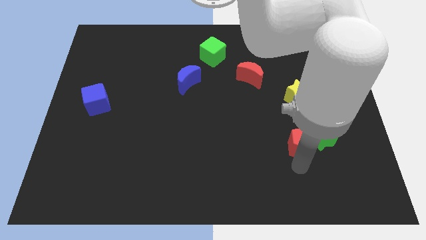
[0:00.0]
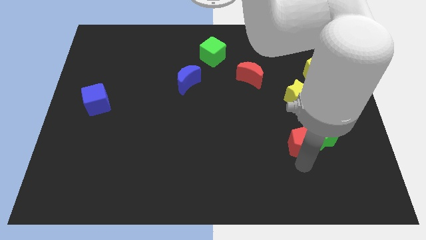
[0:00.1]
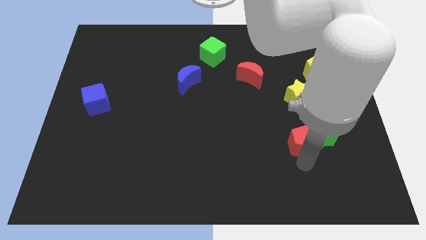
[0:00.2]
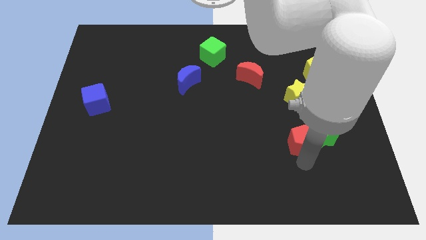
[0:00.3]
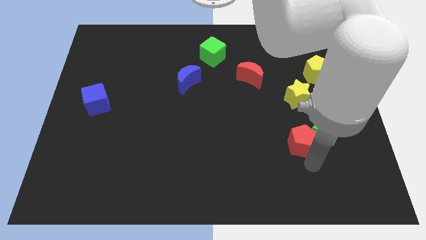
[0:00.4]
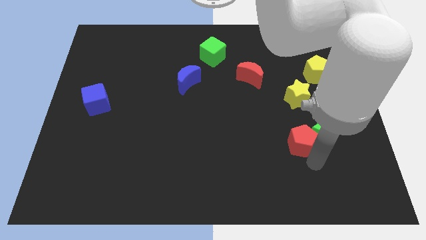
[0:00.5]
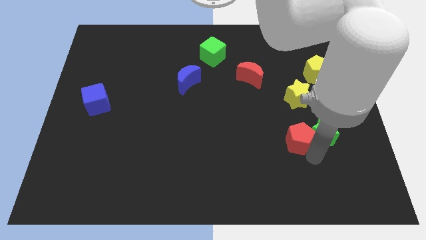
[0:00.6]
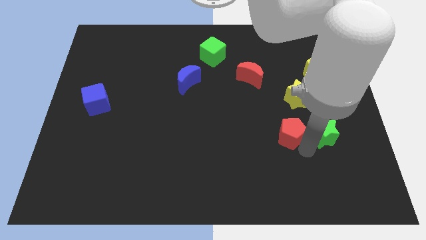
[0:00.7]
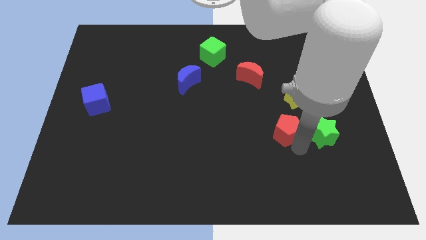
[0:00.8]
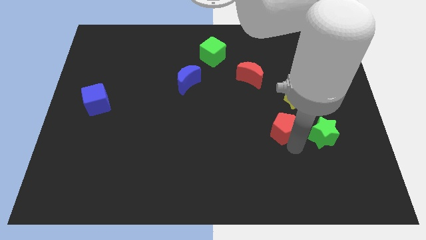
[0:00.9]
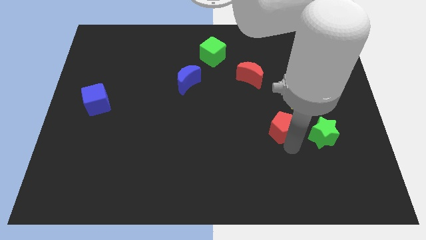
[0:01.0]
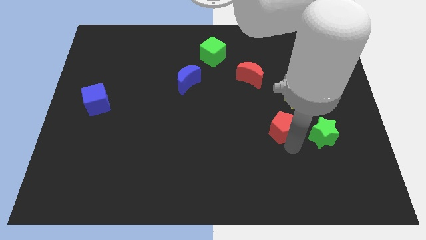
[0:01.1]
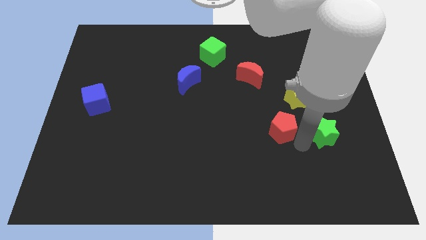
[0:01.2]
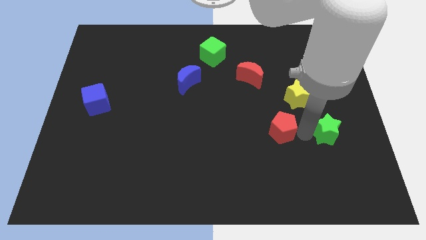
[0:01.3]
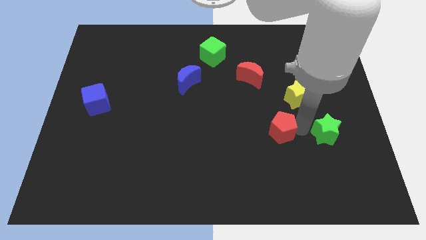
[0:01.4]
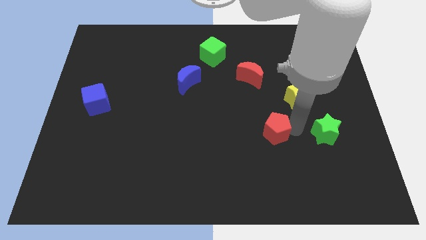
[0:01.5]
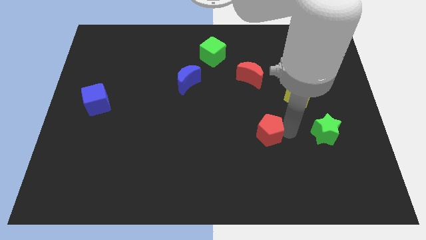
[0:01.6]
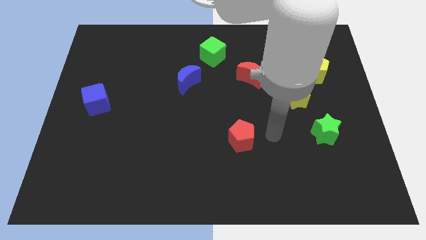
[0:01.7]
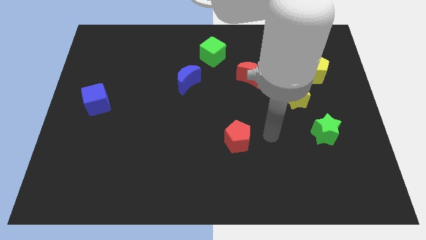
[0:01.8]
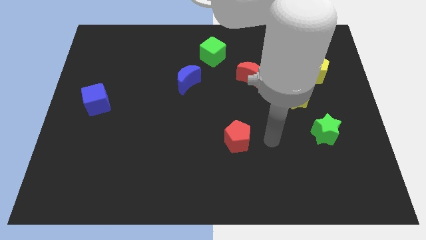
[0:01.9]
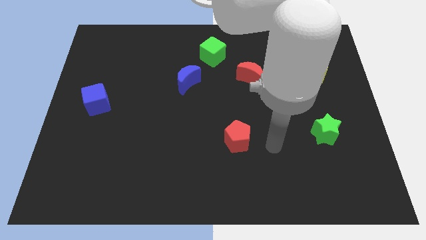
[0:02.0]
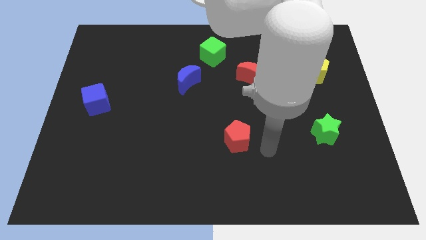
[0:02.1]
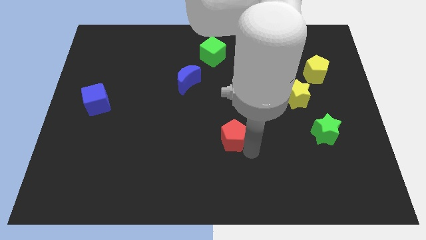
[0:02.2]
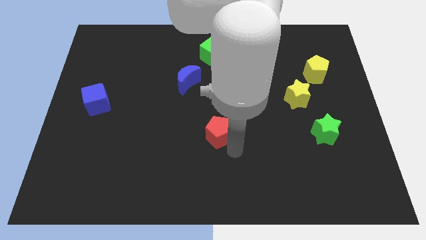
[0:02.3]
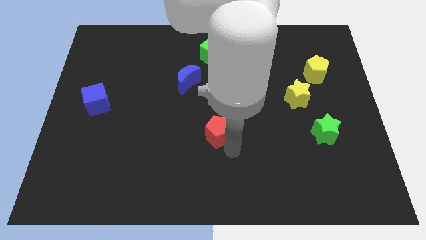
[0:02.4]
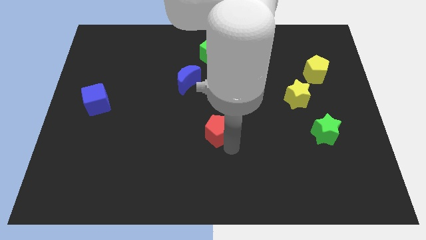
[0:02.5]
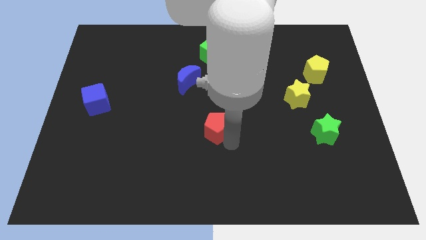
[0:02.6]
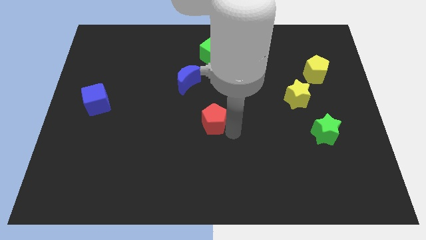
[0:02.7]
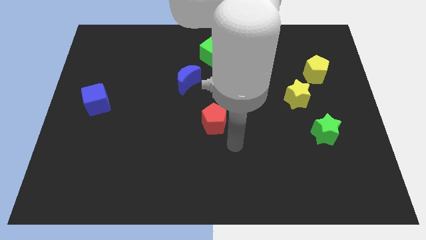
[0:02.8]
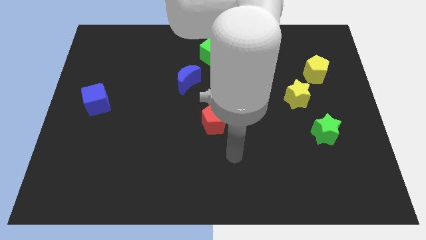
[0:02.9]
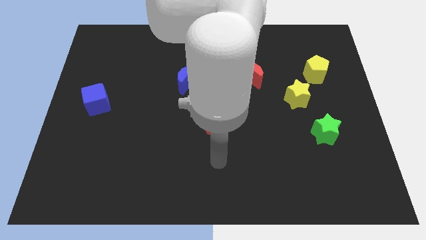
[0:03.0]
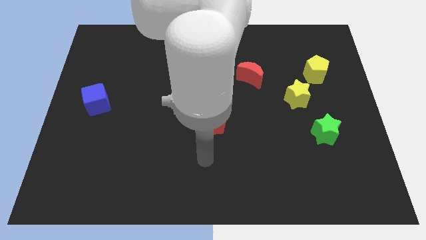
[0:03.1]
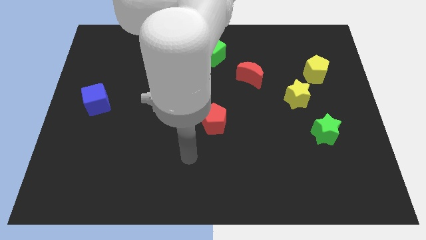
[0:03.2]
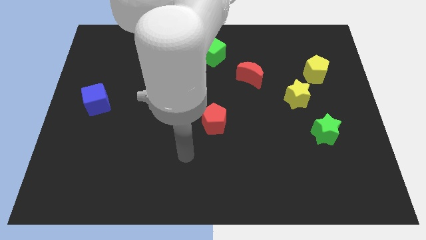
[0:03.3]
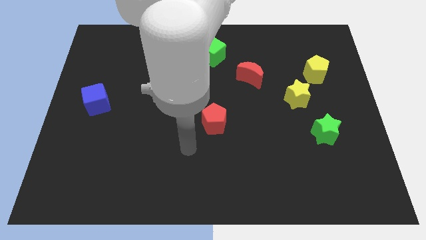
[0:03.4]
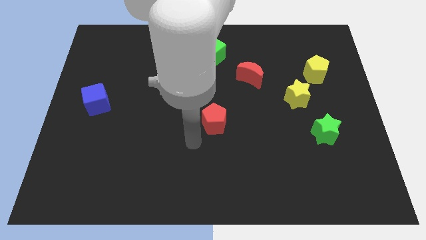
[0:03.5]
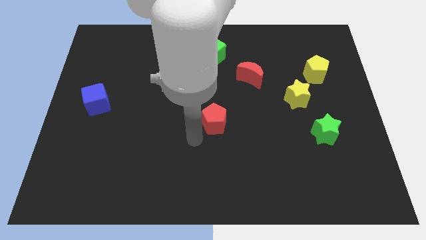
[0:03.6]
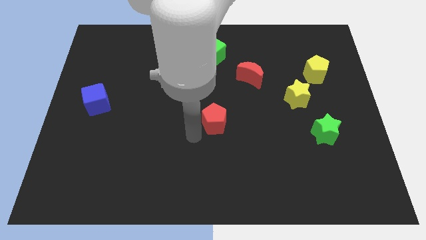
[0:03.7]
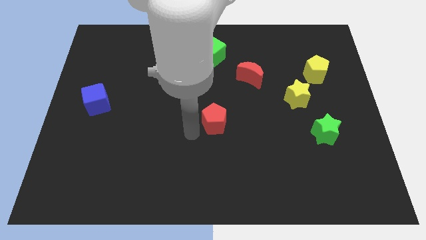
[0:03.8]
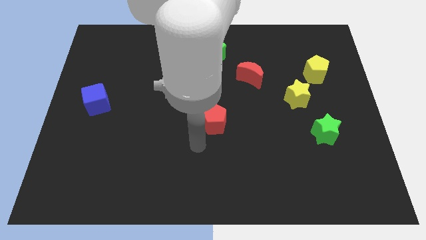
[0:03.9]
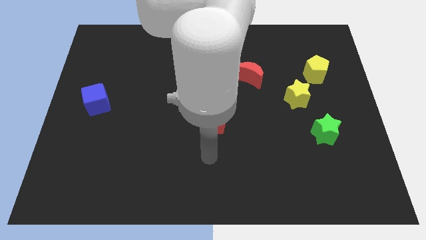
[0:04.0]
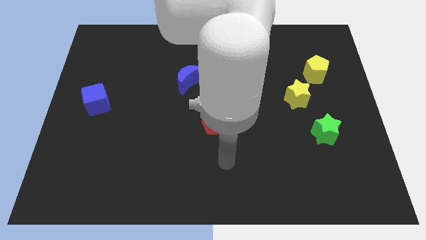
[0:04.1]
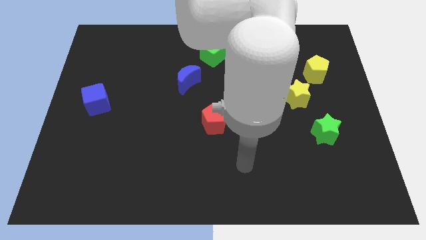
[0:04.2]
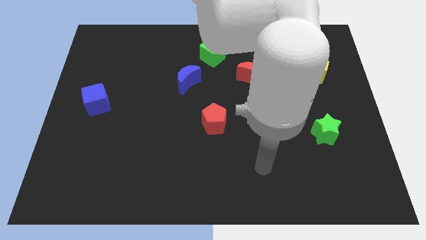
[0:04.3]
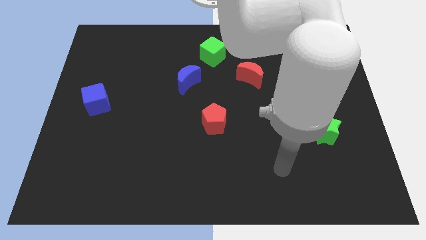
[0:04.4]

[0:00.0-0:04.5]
put the red pentagon vertically below the green cube

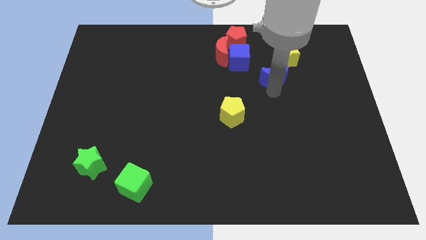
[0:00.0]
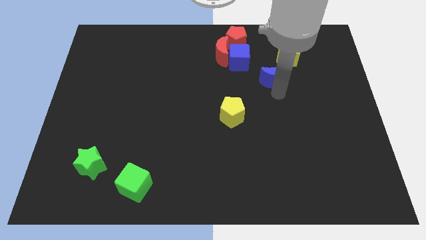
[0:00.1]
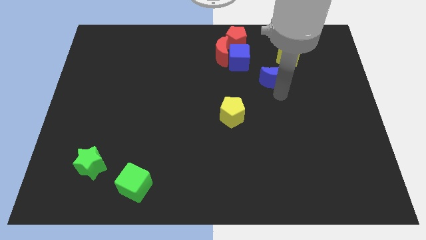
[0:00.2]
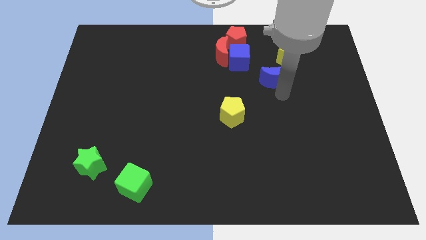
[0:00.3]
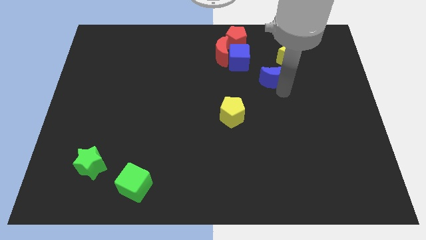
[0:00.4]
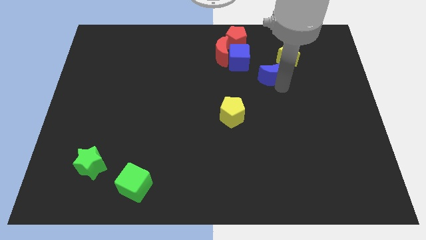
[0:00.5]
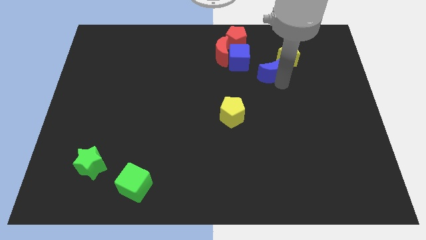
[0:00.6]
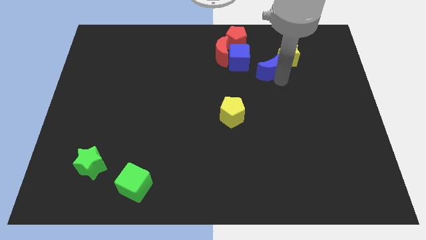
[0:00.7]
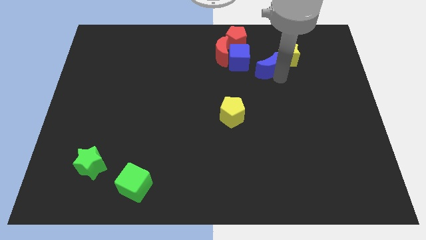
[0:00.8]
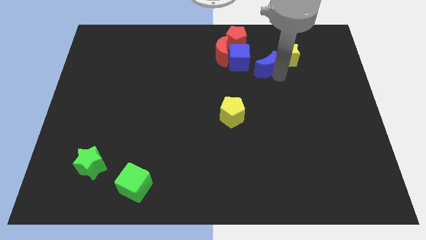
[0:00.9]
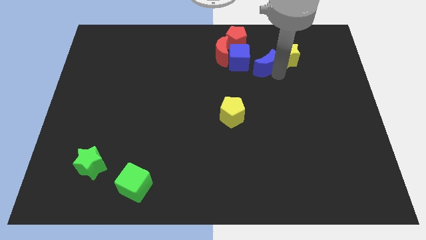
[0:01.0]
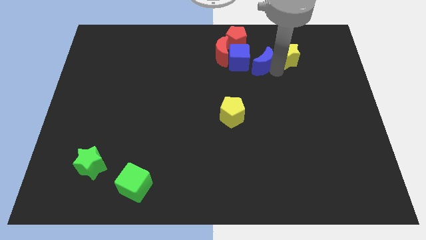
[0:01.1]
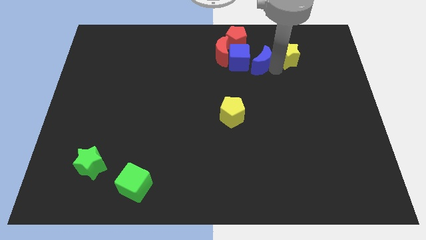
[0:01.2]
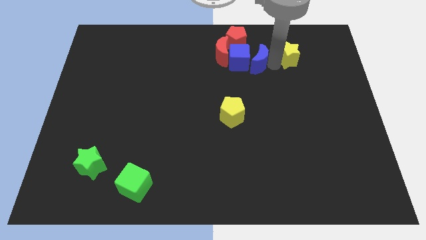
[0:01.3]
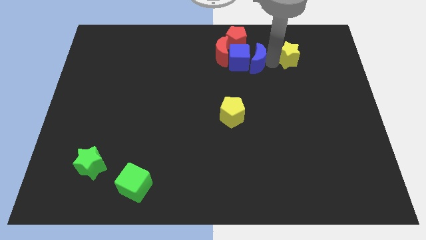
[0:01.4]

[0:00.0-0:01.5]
push blue moon into blue cube

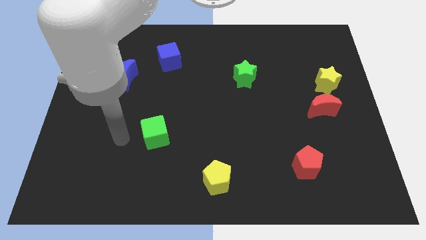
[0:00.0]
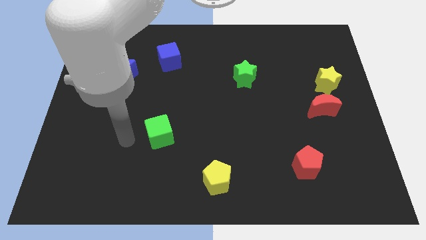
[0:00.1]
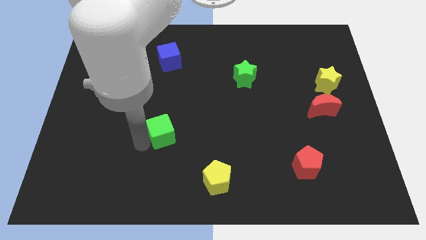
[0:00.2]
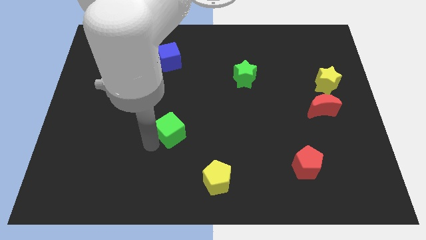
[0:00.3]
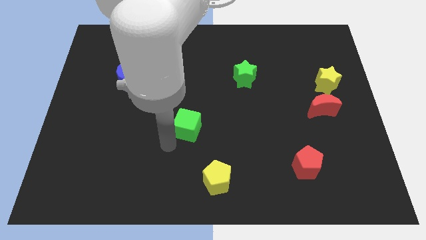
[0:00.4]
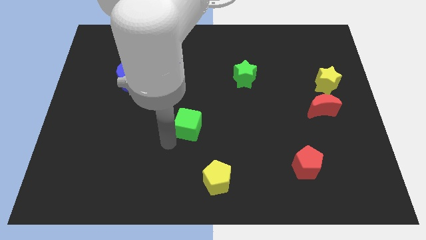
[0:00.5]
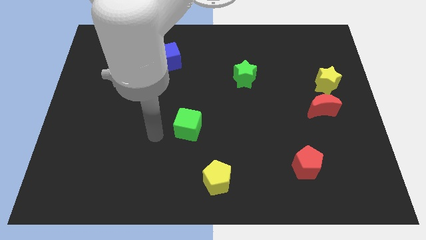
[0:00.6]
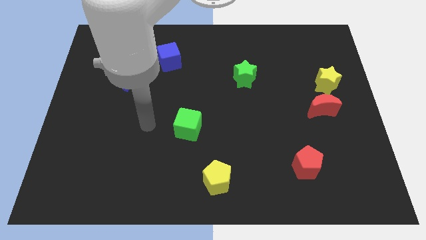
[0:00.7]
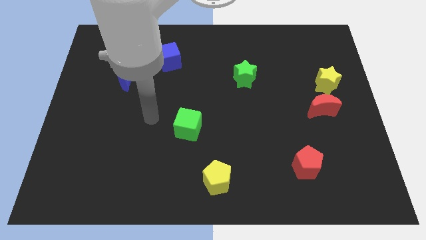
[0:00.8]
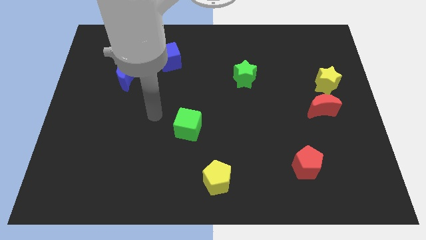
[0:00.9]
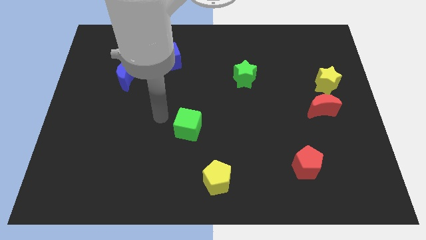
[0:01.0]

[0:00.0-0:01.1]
place green cube to the center of the board

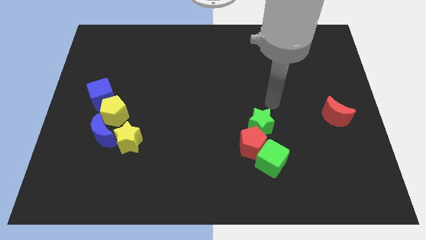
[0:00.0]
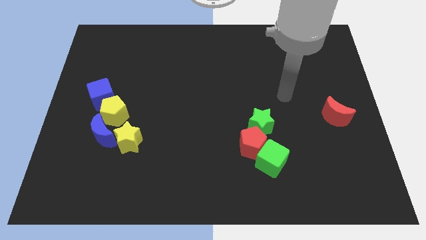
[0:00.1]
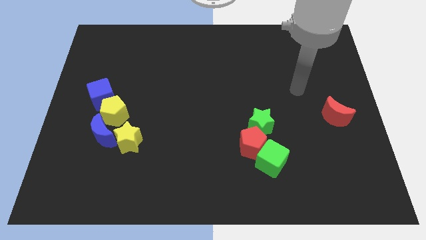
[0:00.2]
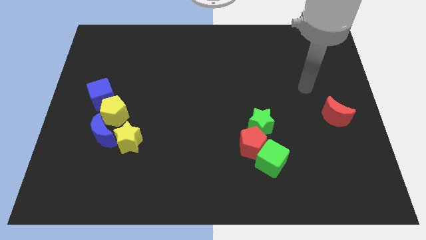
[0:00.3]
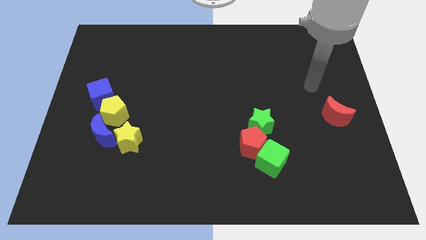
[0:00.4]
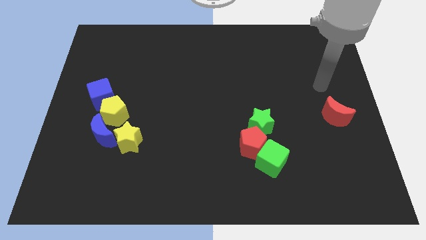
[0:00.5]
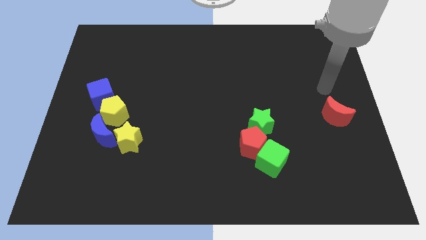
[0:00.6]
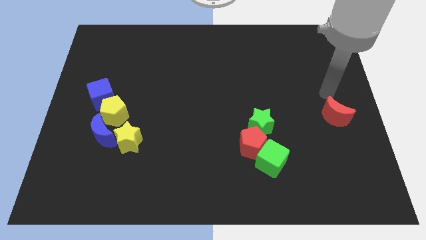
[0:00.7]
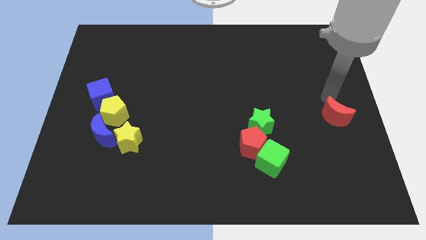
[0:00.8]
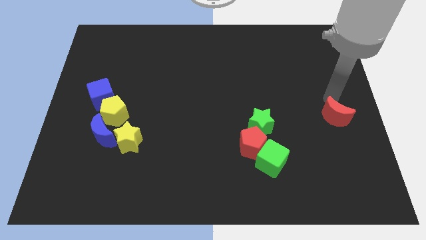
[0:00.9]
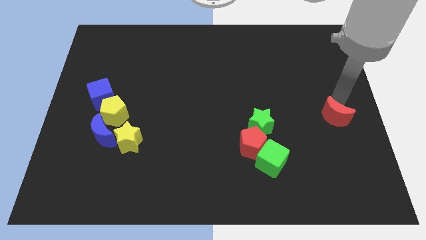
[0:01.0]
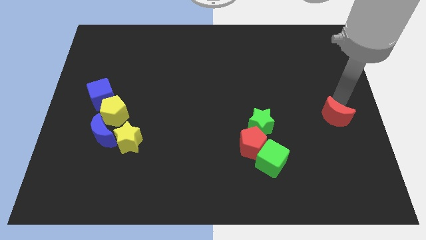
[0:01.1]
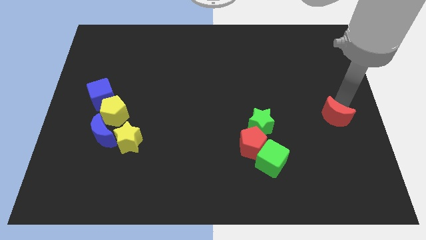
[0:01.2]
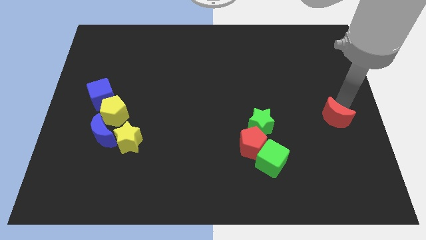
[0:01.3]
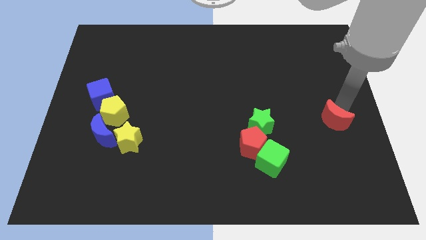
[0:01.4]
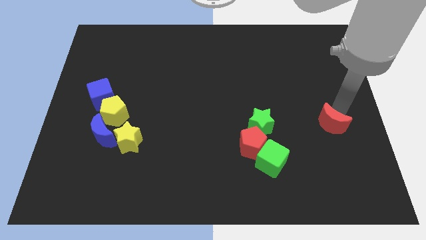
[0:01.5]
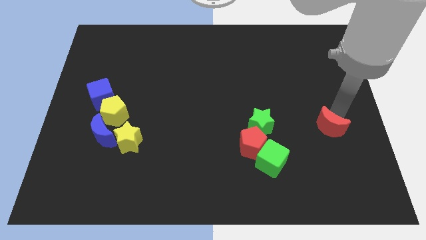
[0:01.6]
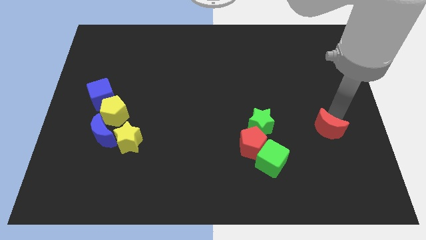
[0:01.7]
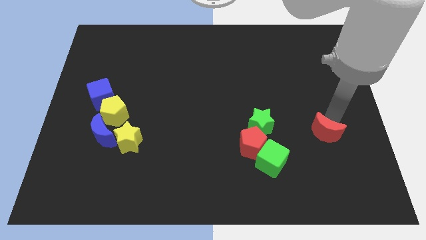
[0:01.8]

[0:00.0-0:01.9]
push the red crescent to the right of the red pentagon
